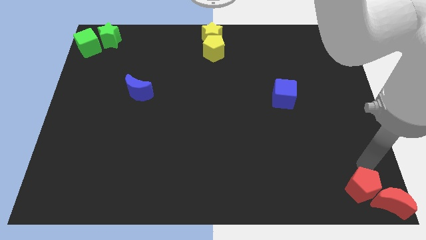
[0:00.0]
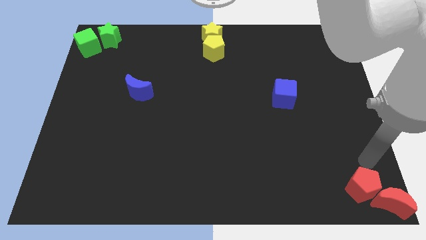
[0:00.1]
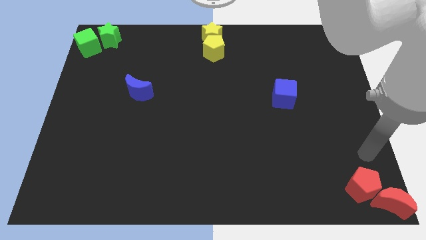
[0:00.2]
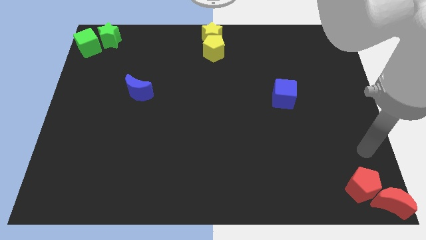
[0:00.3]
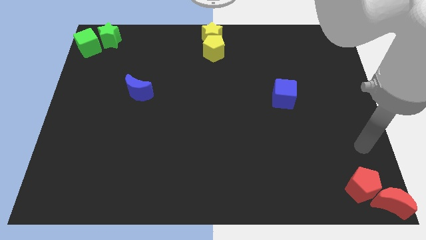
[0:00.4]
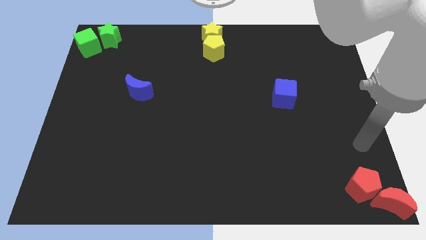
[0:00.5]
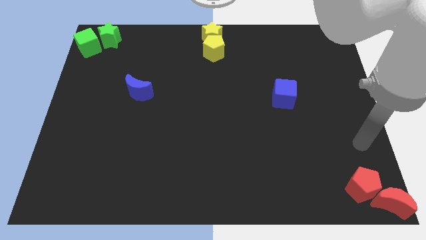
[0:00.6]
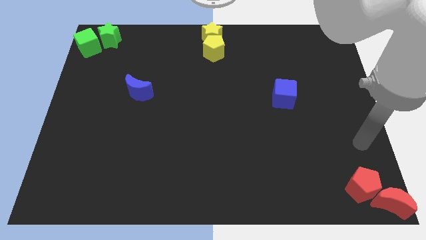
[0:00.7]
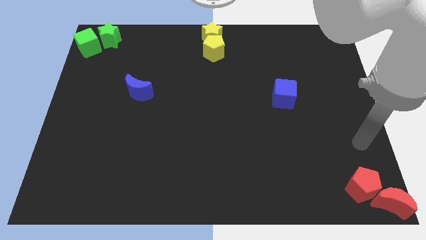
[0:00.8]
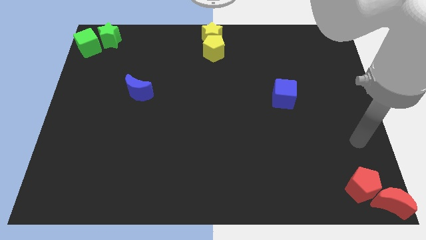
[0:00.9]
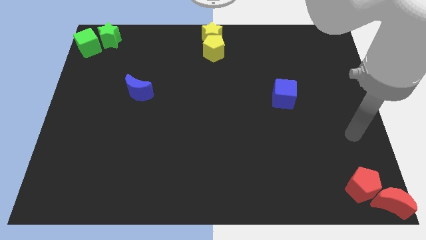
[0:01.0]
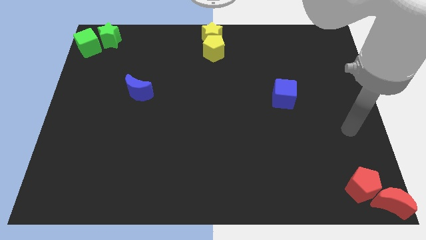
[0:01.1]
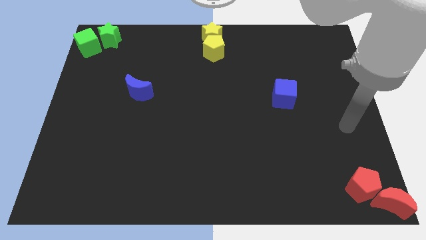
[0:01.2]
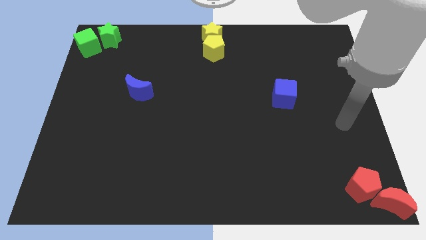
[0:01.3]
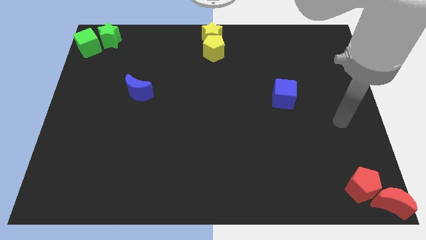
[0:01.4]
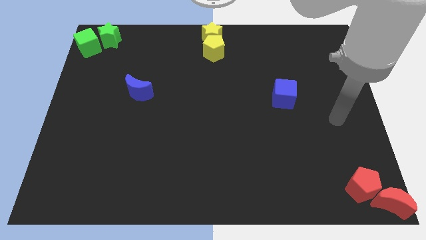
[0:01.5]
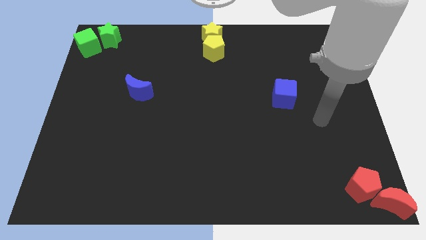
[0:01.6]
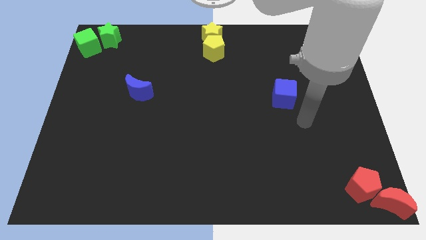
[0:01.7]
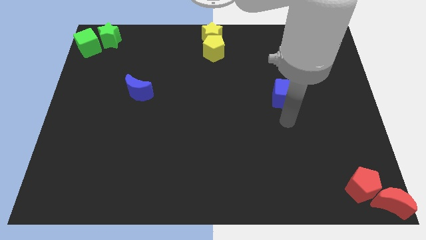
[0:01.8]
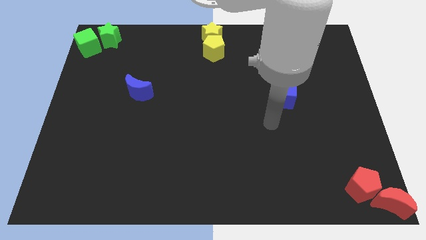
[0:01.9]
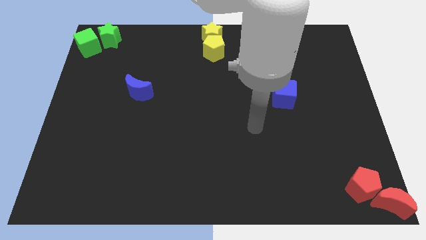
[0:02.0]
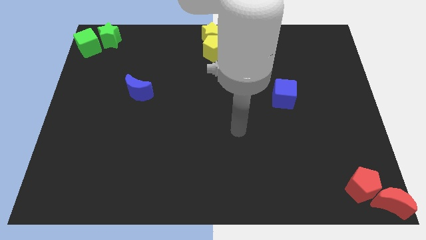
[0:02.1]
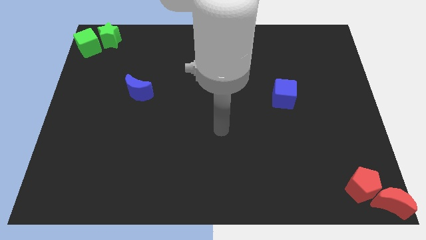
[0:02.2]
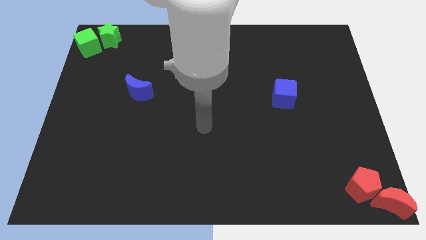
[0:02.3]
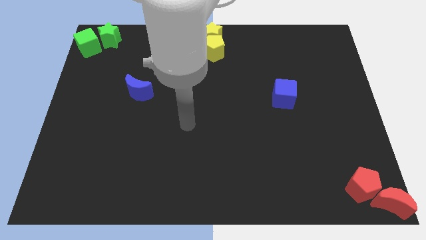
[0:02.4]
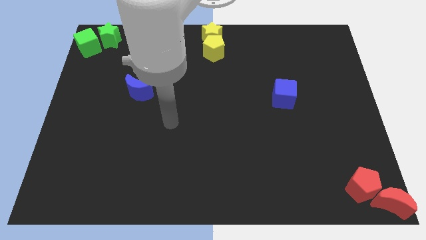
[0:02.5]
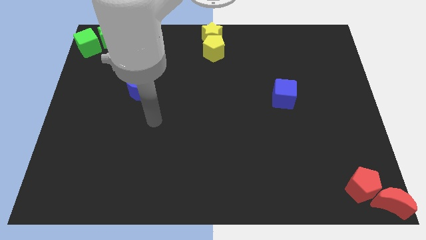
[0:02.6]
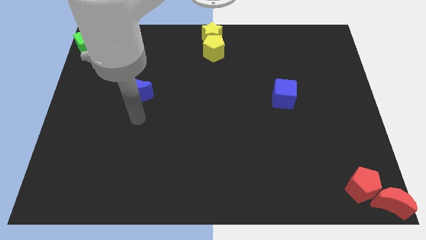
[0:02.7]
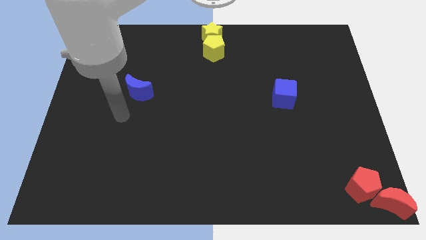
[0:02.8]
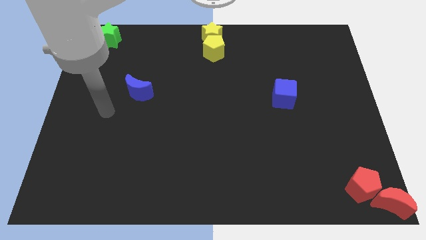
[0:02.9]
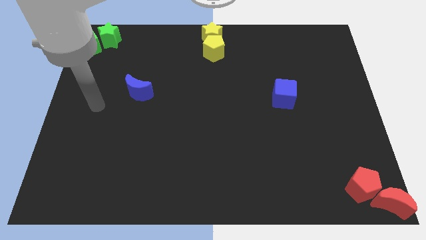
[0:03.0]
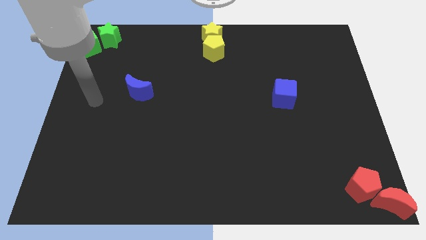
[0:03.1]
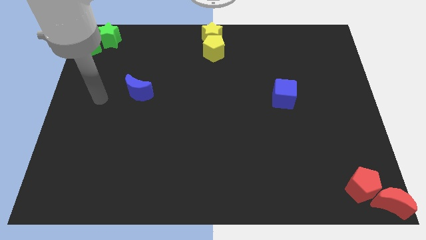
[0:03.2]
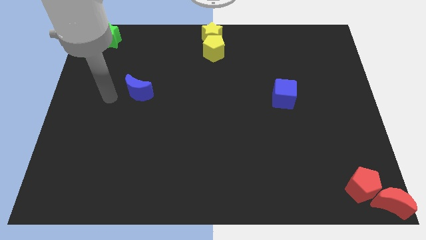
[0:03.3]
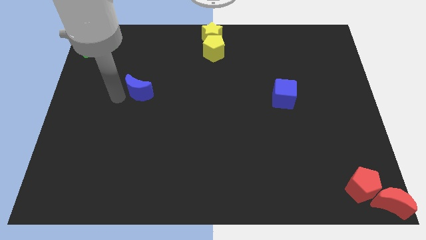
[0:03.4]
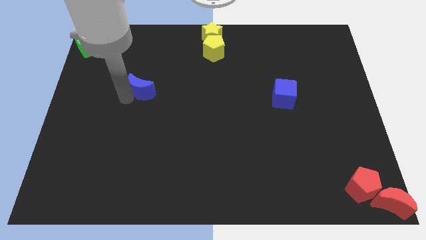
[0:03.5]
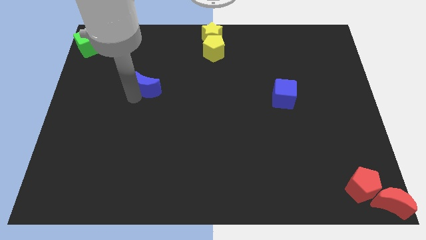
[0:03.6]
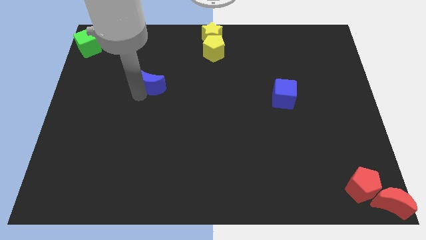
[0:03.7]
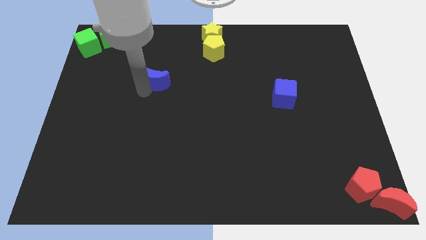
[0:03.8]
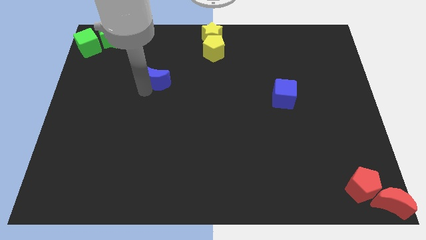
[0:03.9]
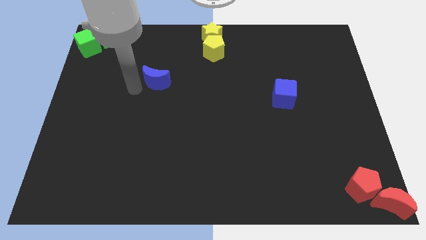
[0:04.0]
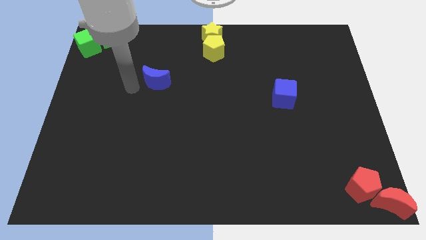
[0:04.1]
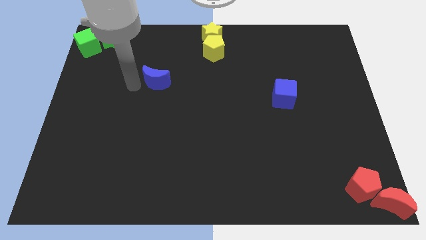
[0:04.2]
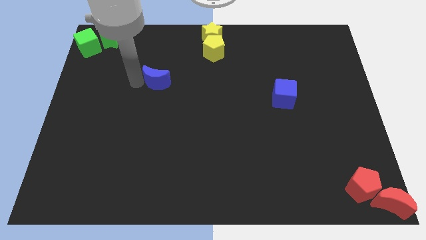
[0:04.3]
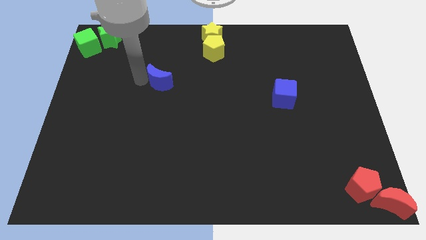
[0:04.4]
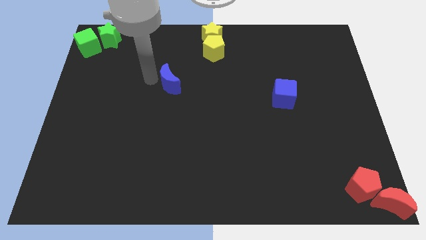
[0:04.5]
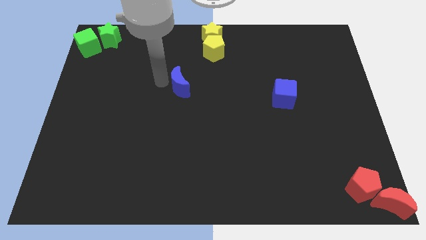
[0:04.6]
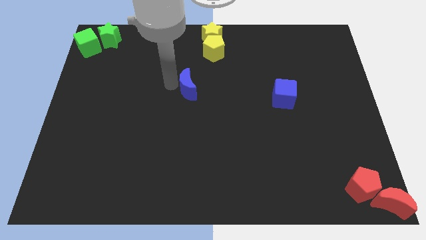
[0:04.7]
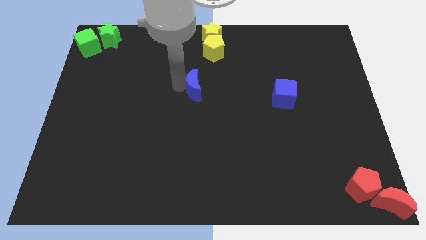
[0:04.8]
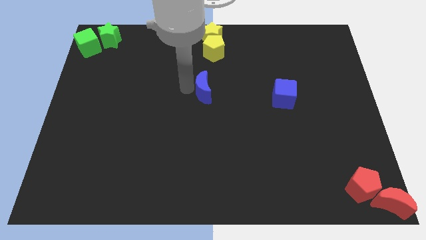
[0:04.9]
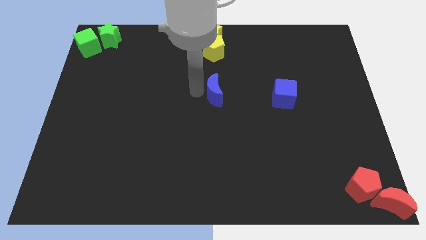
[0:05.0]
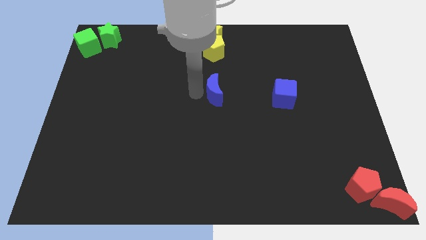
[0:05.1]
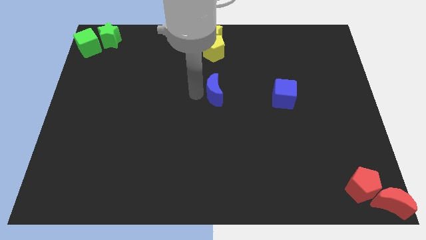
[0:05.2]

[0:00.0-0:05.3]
move the blue crescent vertically below the yellow blocks

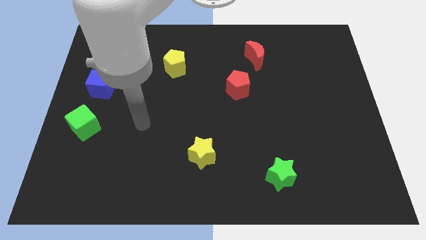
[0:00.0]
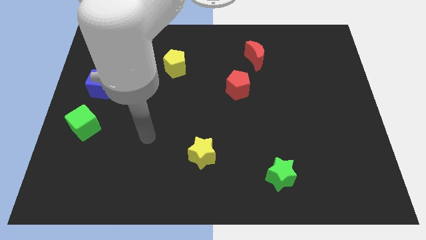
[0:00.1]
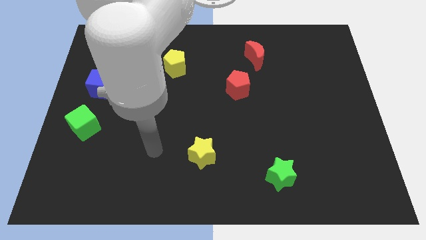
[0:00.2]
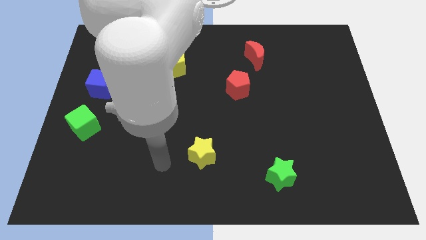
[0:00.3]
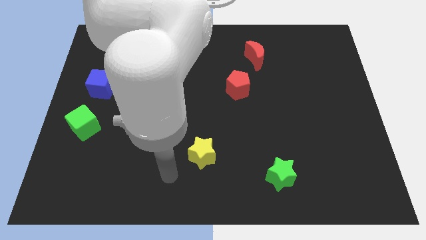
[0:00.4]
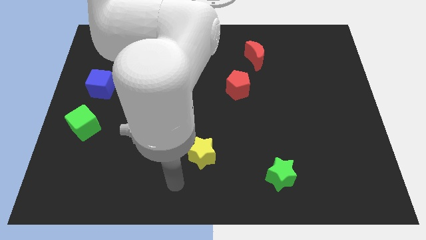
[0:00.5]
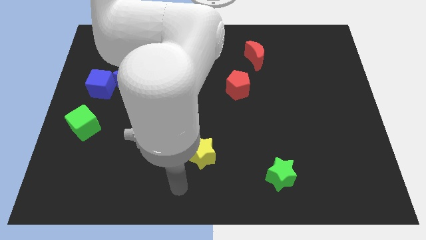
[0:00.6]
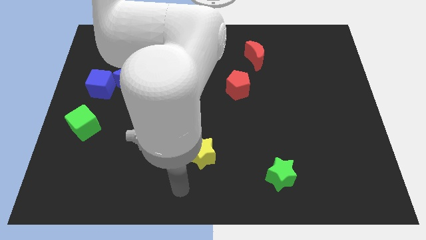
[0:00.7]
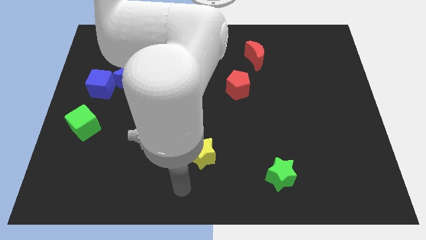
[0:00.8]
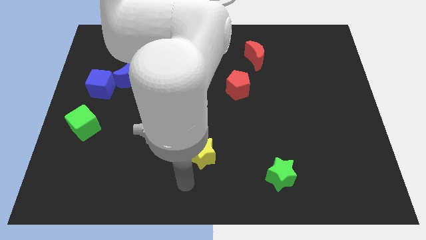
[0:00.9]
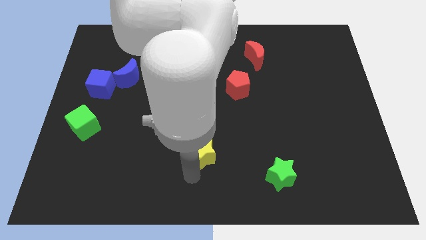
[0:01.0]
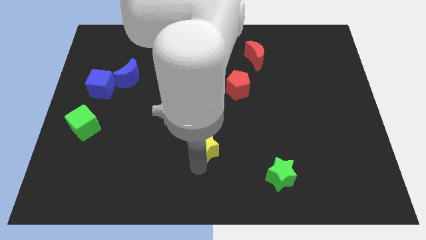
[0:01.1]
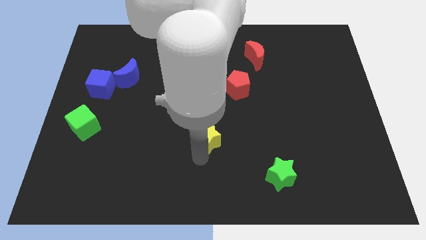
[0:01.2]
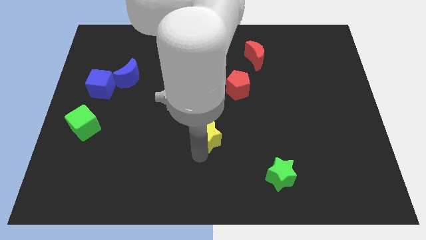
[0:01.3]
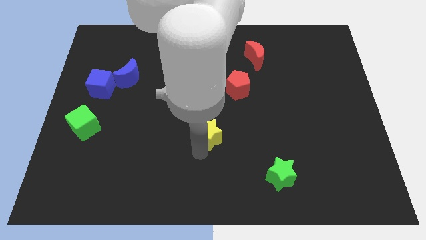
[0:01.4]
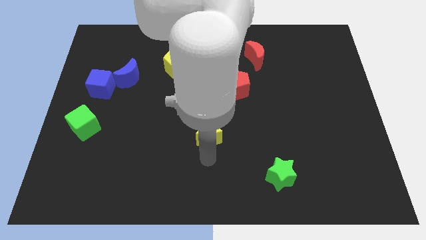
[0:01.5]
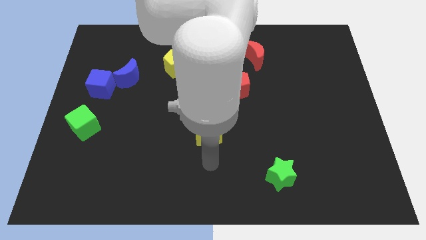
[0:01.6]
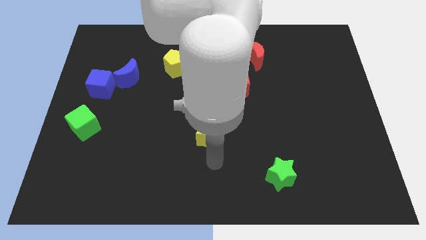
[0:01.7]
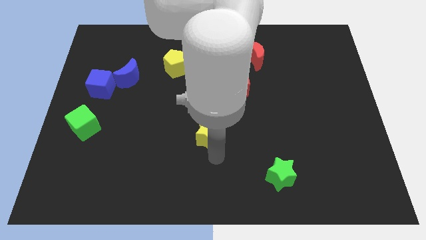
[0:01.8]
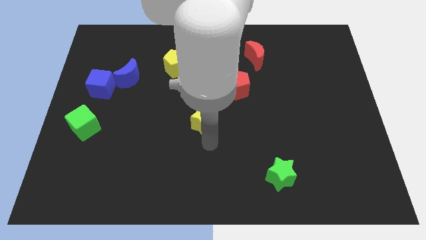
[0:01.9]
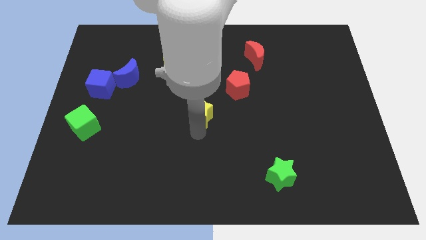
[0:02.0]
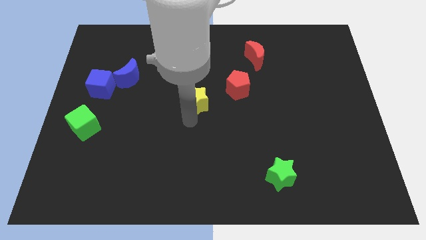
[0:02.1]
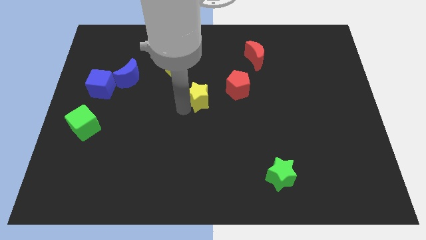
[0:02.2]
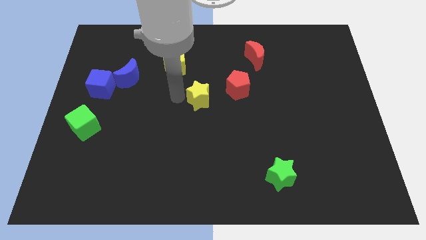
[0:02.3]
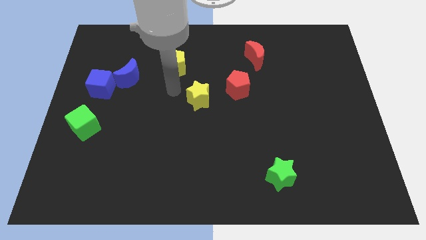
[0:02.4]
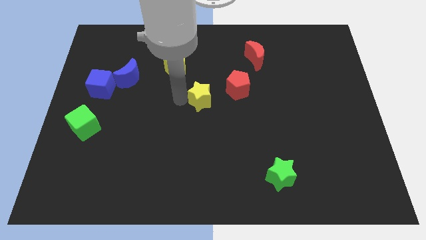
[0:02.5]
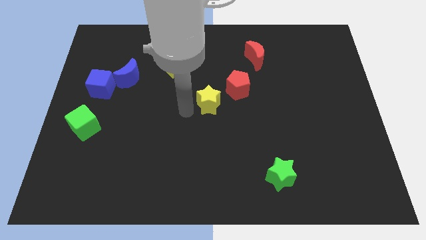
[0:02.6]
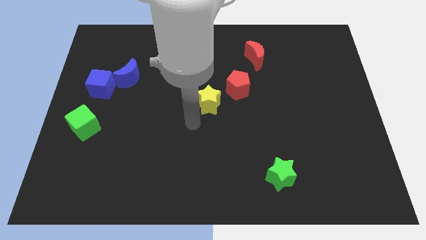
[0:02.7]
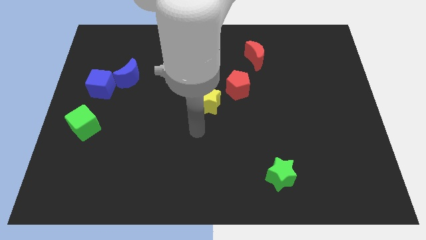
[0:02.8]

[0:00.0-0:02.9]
move the yellow star diagonal to the green star

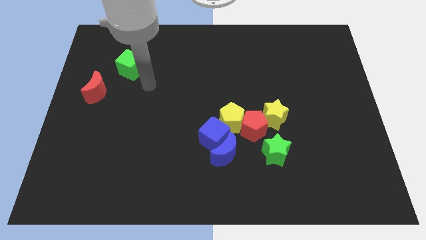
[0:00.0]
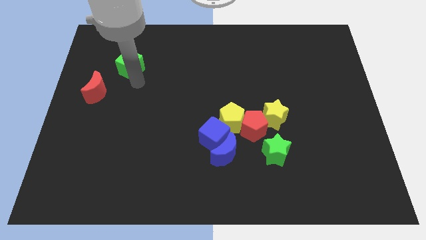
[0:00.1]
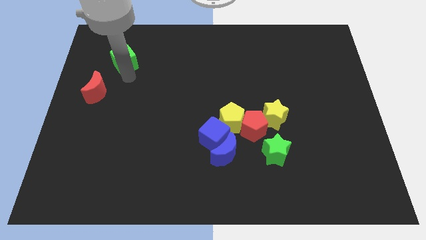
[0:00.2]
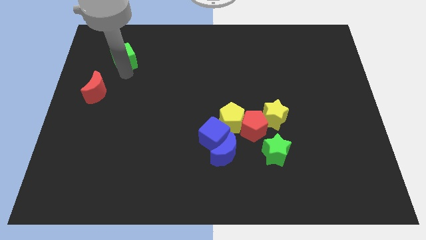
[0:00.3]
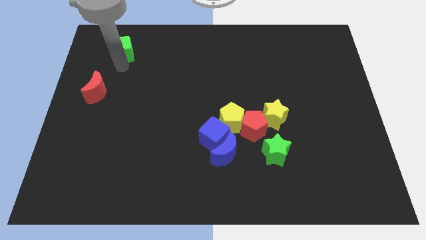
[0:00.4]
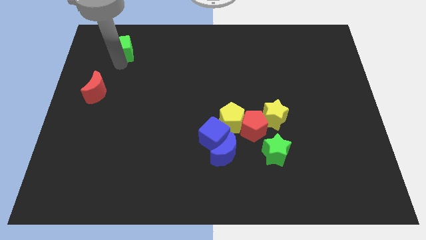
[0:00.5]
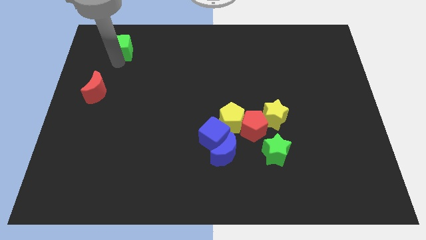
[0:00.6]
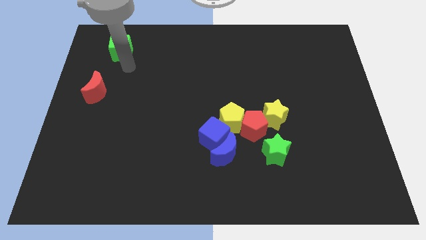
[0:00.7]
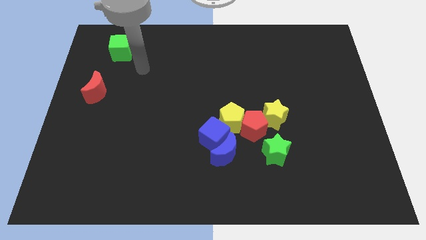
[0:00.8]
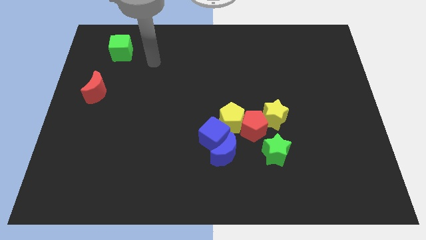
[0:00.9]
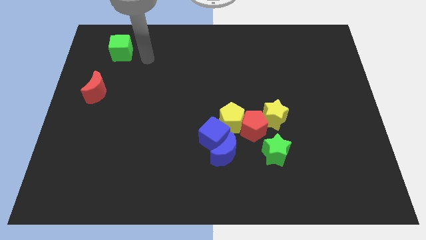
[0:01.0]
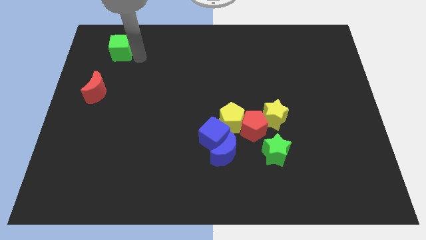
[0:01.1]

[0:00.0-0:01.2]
move green towards top left
